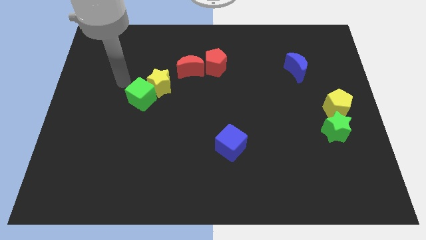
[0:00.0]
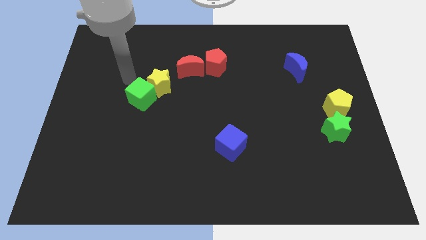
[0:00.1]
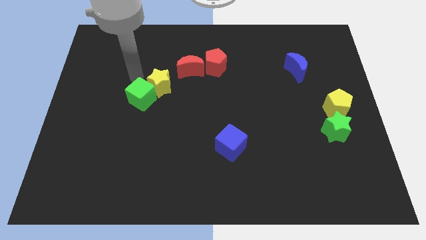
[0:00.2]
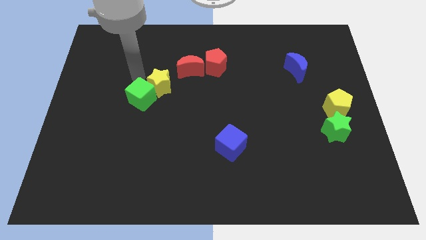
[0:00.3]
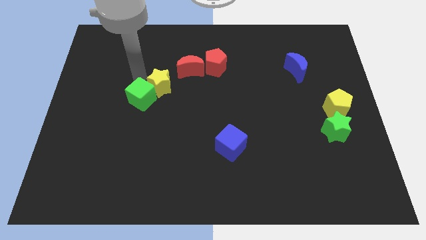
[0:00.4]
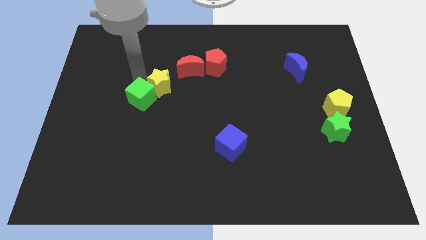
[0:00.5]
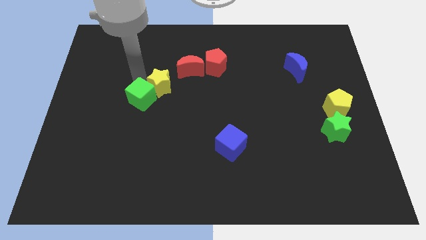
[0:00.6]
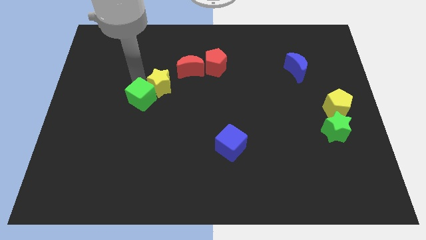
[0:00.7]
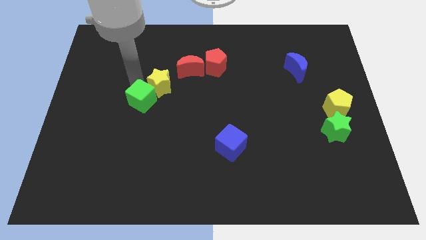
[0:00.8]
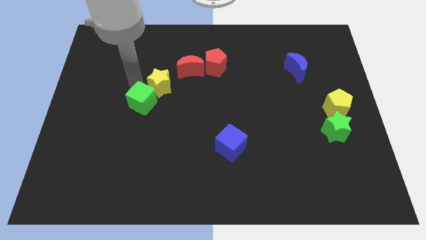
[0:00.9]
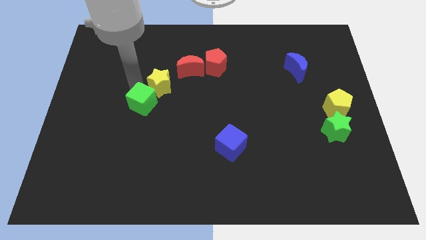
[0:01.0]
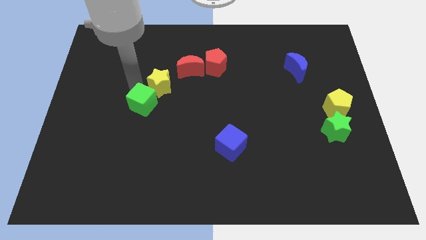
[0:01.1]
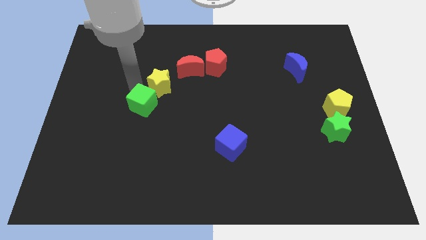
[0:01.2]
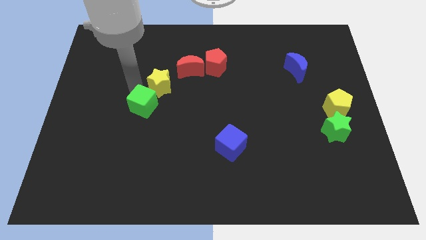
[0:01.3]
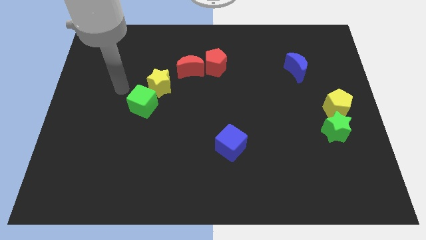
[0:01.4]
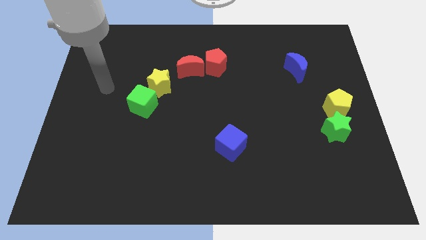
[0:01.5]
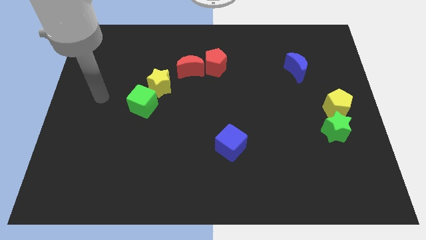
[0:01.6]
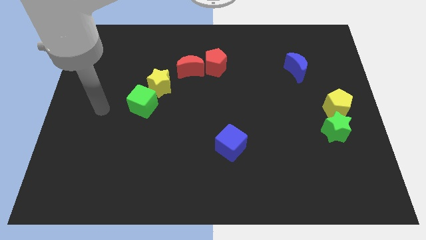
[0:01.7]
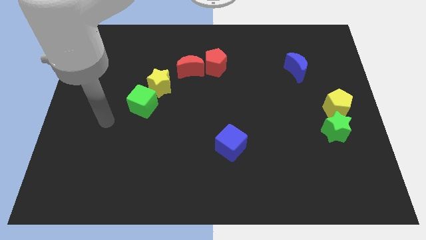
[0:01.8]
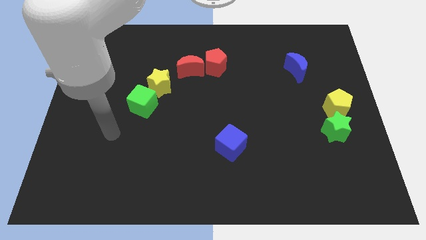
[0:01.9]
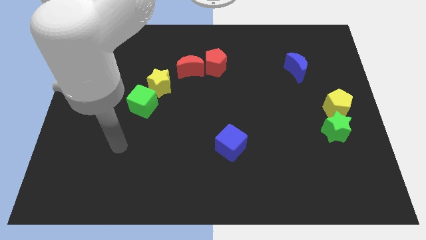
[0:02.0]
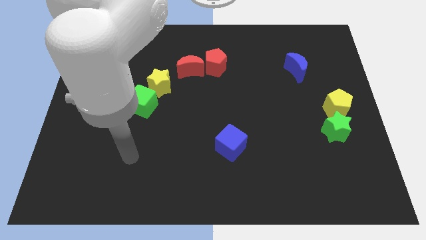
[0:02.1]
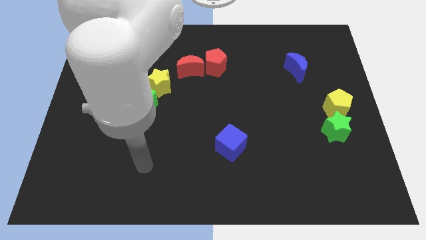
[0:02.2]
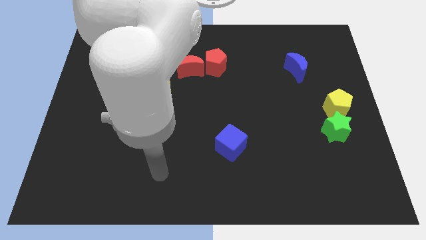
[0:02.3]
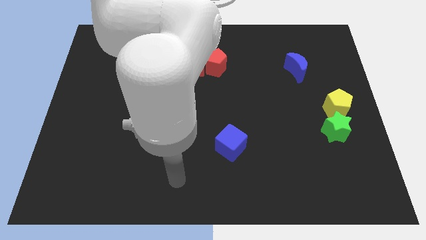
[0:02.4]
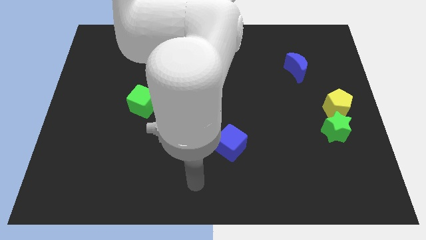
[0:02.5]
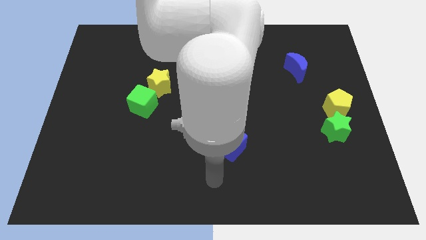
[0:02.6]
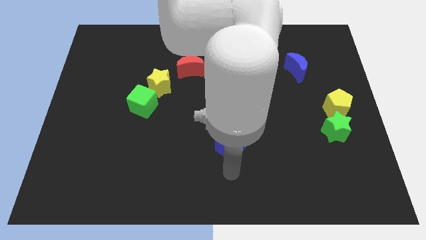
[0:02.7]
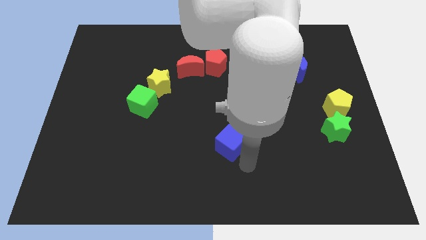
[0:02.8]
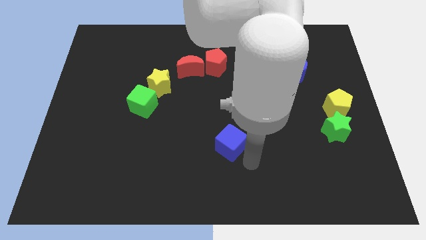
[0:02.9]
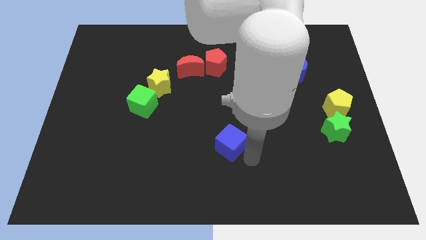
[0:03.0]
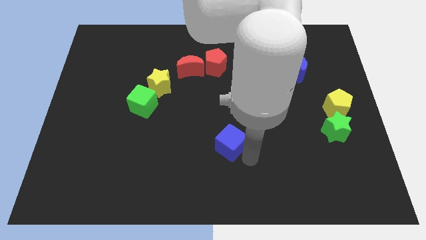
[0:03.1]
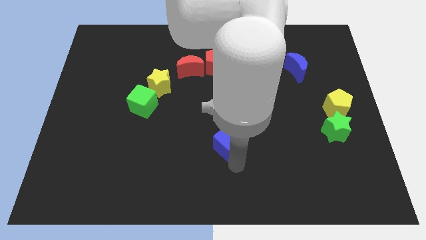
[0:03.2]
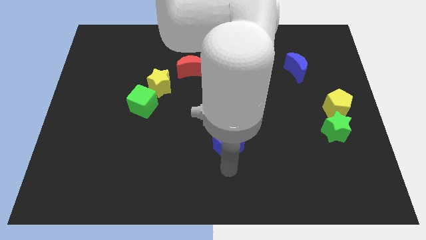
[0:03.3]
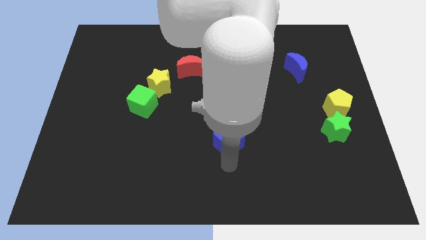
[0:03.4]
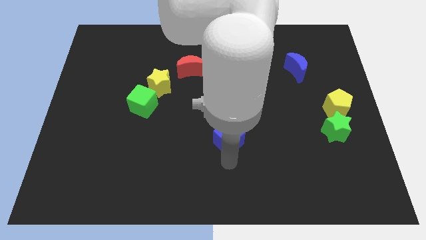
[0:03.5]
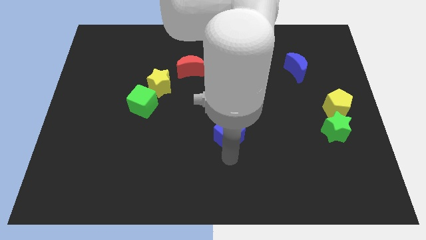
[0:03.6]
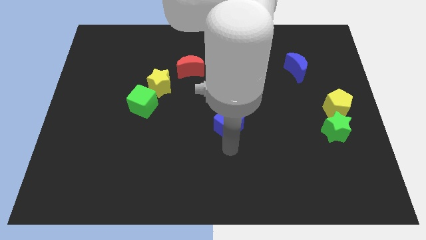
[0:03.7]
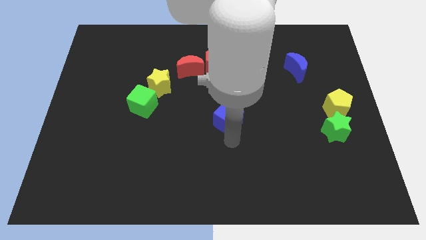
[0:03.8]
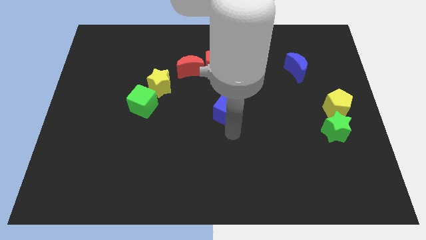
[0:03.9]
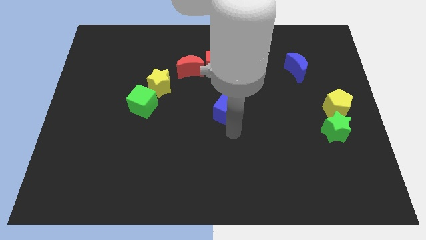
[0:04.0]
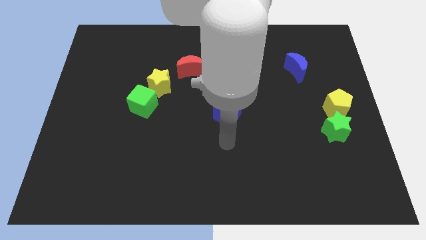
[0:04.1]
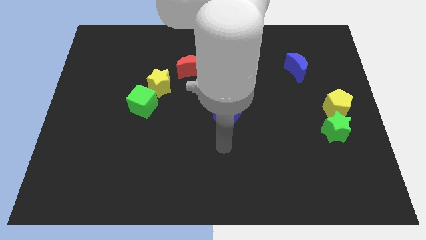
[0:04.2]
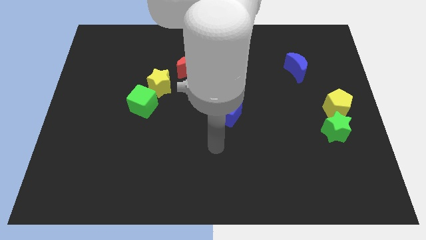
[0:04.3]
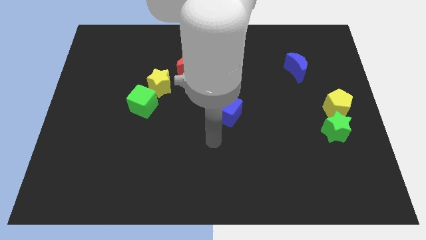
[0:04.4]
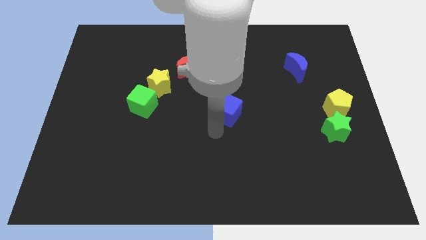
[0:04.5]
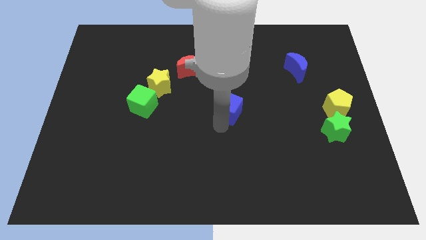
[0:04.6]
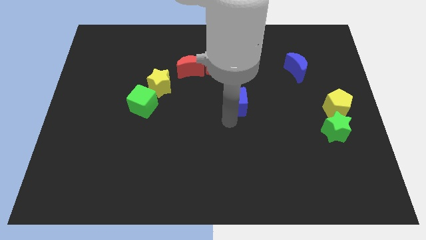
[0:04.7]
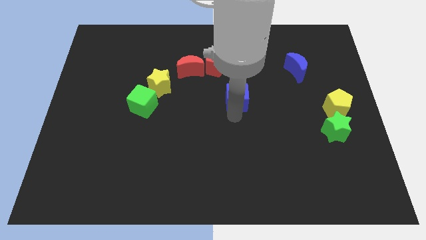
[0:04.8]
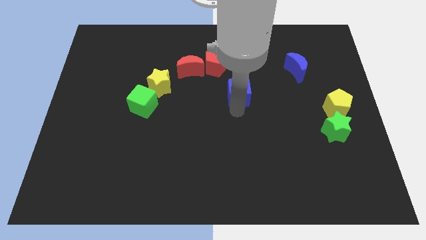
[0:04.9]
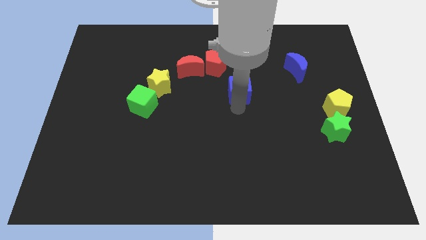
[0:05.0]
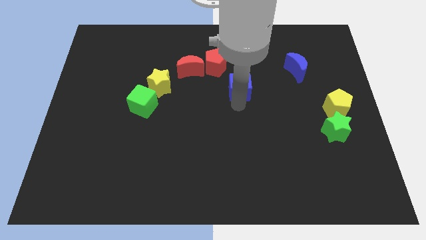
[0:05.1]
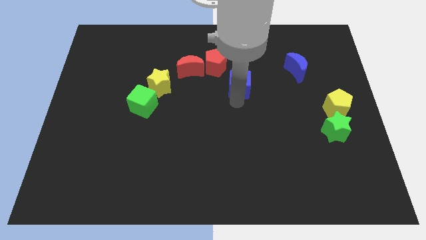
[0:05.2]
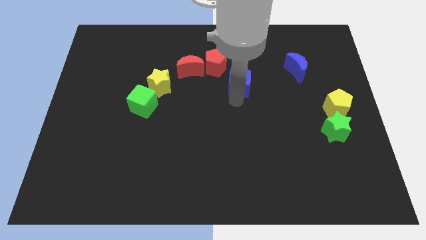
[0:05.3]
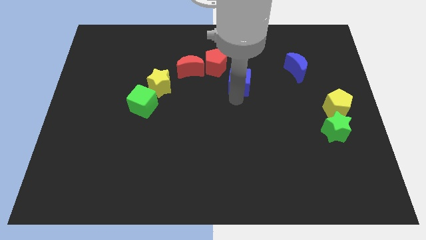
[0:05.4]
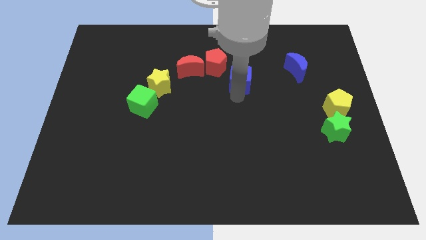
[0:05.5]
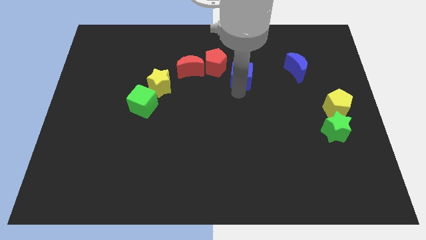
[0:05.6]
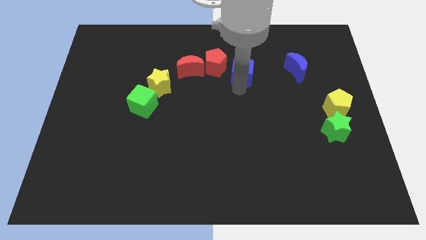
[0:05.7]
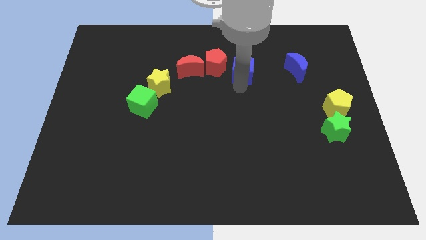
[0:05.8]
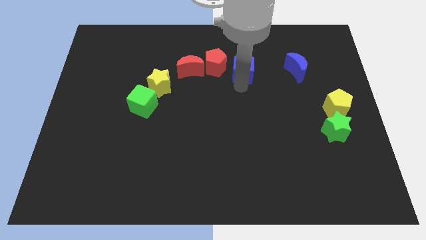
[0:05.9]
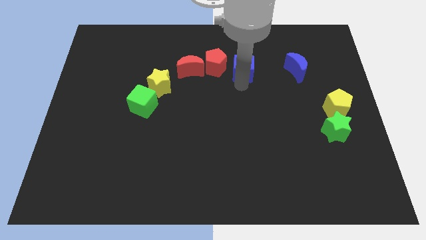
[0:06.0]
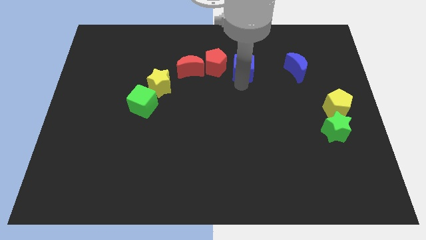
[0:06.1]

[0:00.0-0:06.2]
place blue cube to right of red pentagon

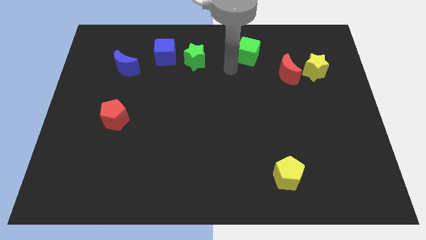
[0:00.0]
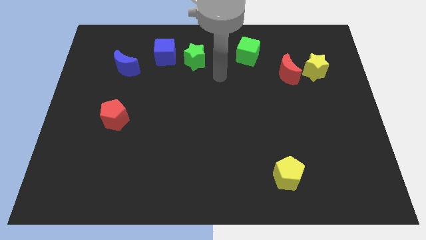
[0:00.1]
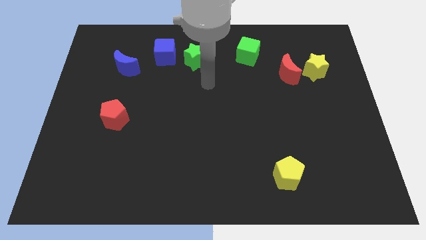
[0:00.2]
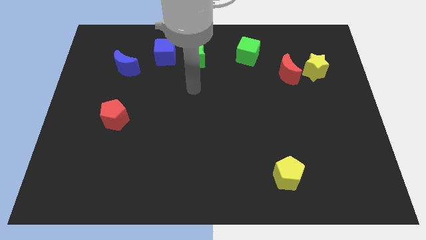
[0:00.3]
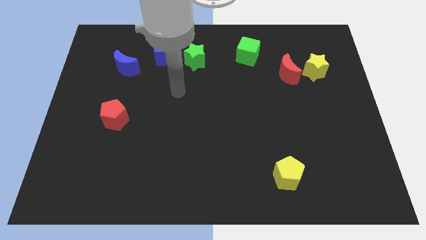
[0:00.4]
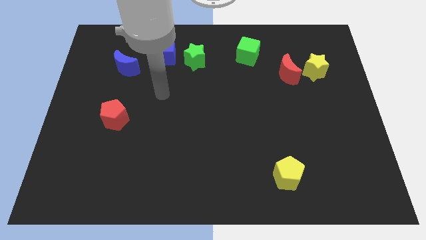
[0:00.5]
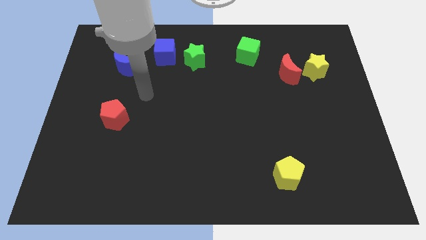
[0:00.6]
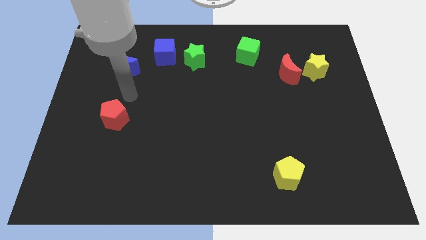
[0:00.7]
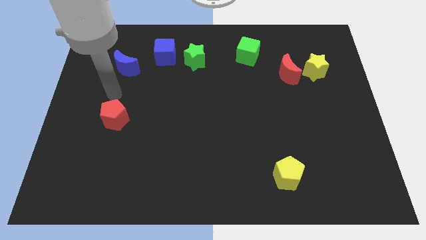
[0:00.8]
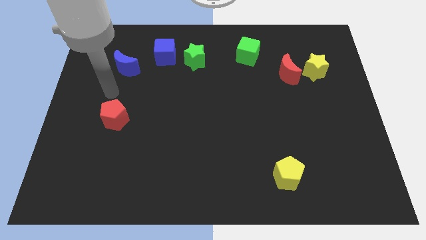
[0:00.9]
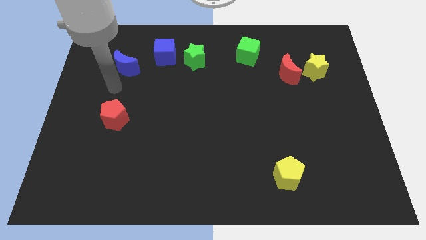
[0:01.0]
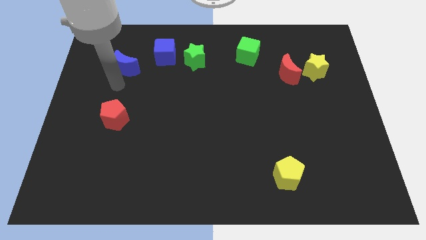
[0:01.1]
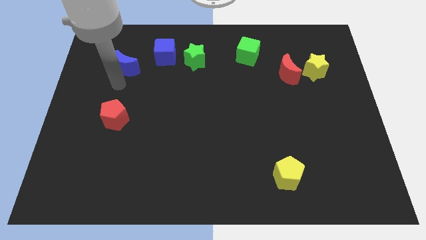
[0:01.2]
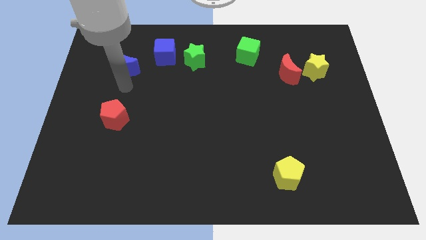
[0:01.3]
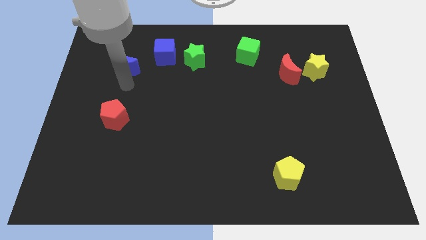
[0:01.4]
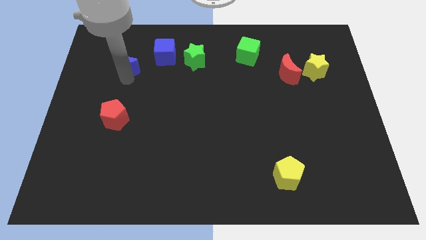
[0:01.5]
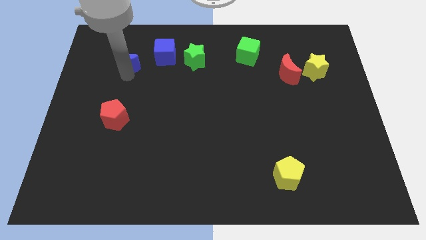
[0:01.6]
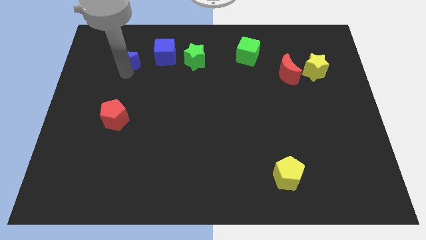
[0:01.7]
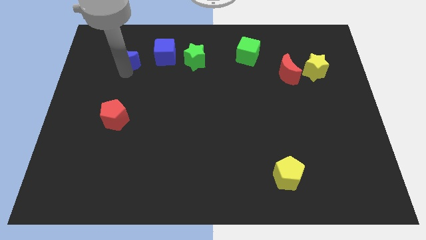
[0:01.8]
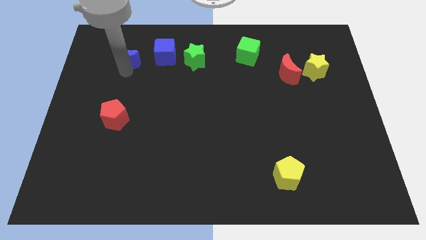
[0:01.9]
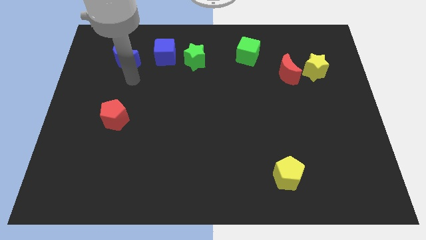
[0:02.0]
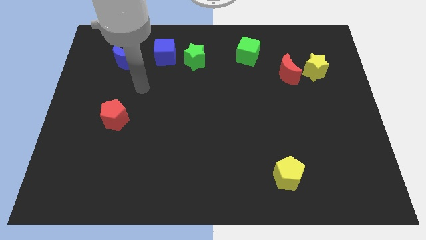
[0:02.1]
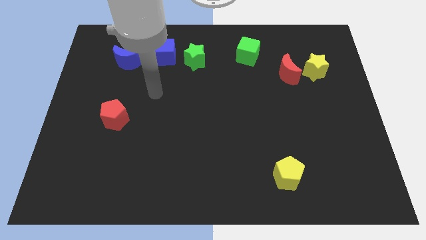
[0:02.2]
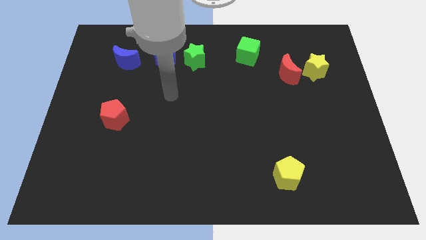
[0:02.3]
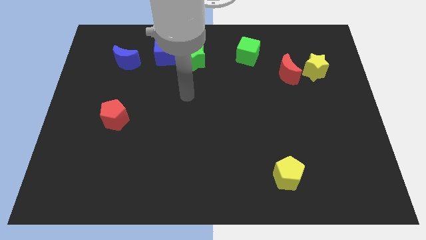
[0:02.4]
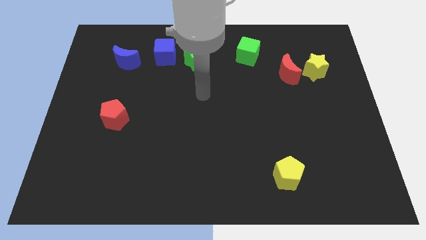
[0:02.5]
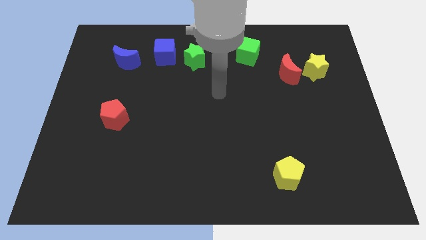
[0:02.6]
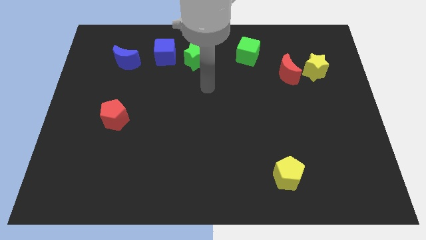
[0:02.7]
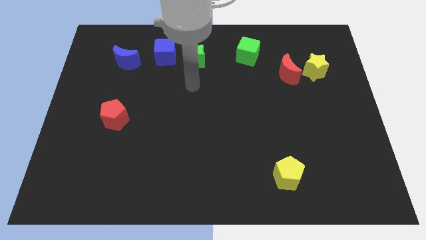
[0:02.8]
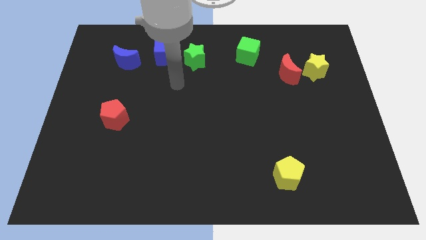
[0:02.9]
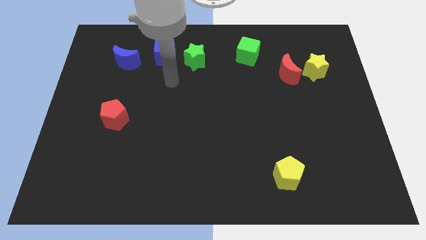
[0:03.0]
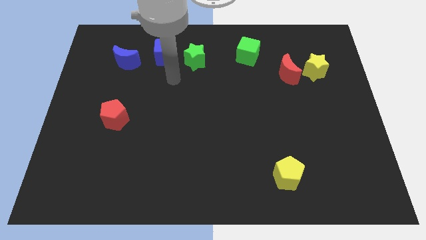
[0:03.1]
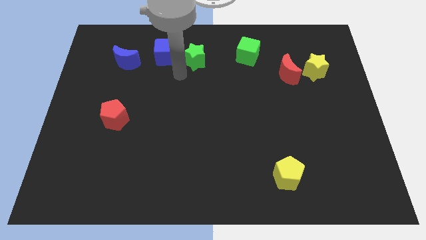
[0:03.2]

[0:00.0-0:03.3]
place blue crescent to the left of blue cube
